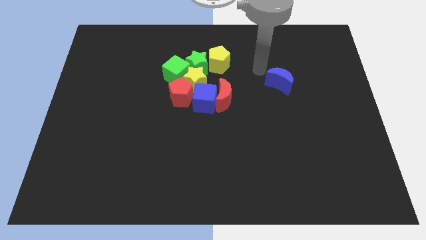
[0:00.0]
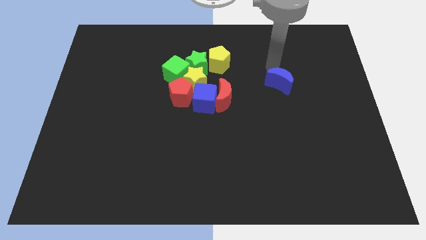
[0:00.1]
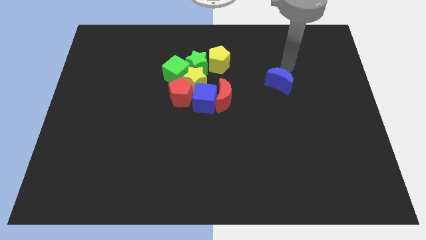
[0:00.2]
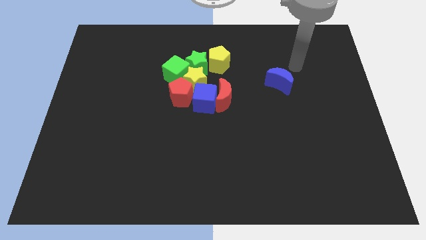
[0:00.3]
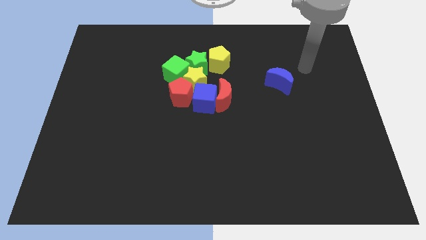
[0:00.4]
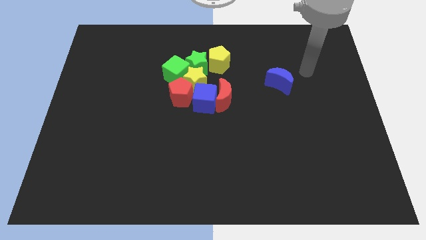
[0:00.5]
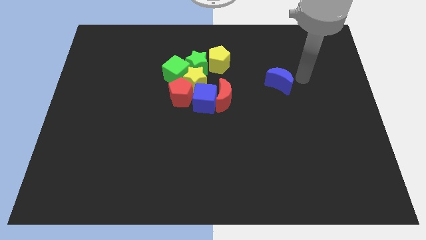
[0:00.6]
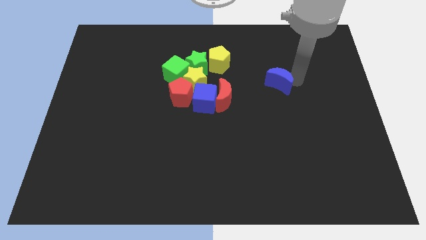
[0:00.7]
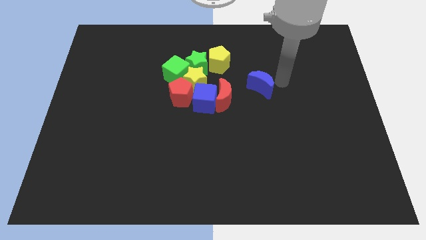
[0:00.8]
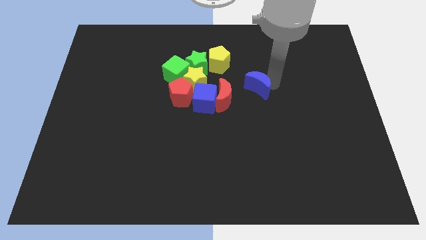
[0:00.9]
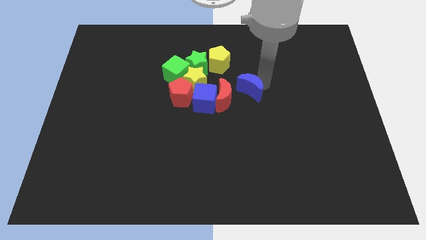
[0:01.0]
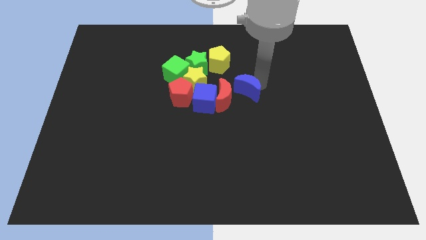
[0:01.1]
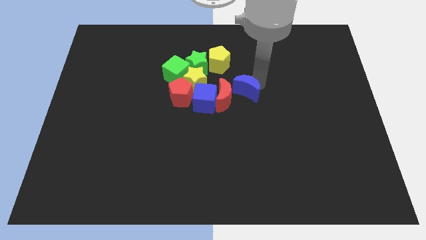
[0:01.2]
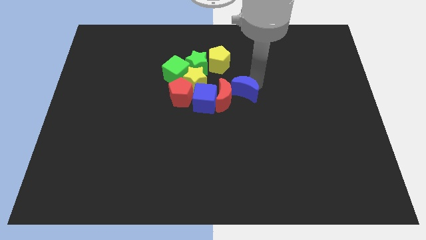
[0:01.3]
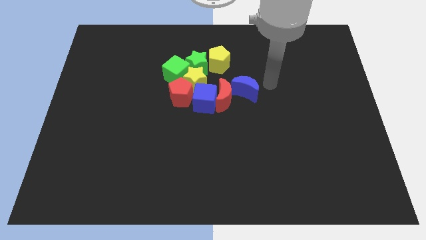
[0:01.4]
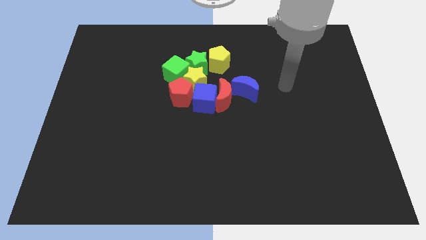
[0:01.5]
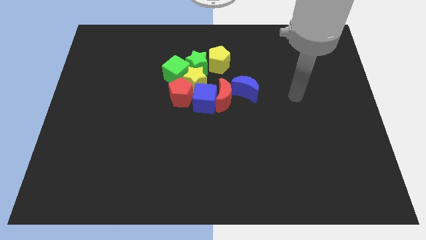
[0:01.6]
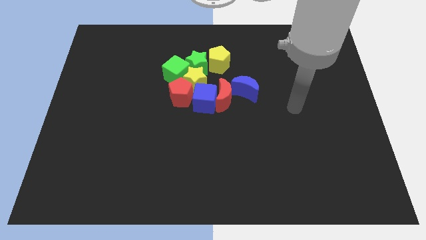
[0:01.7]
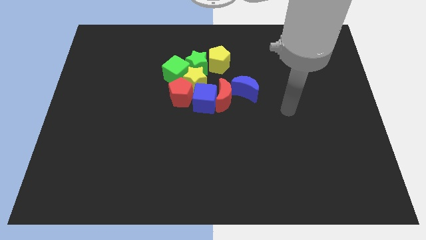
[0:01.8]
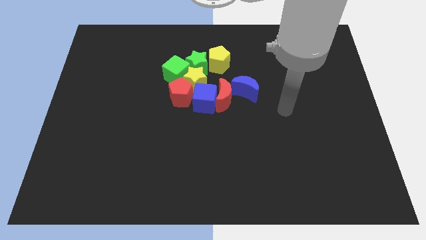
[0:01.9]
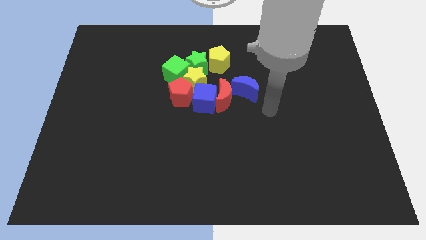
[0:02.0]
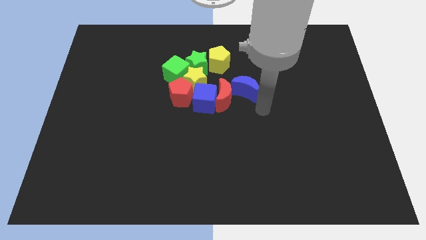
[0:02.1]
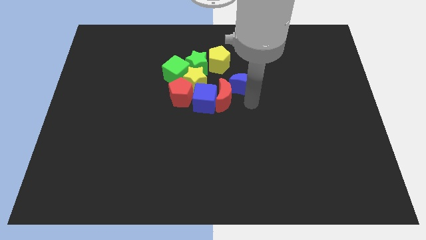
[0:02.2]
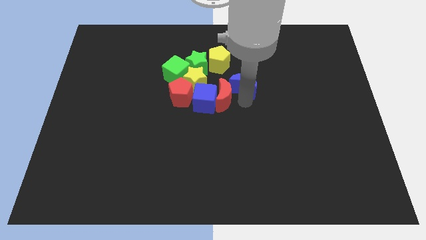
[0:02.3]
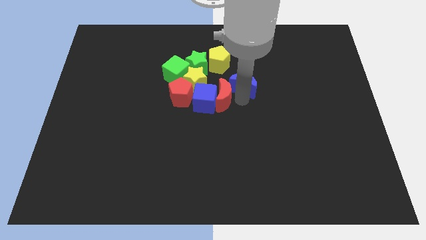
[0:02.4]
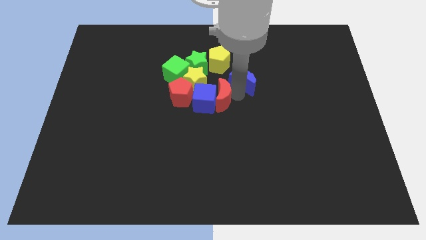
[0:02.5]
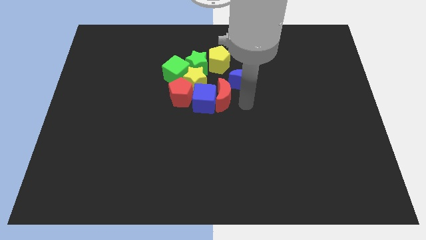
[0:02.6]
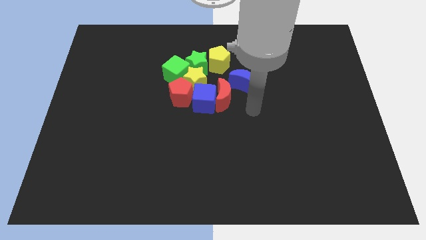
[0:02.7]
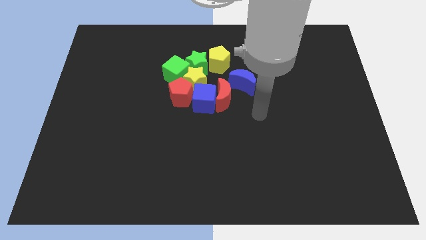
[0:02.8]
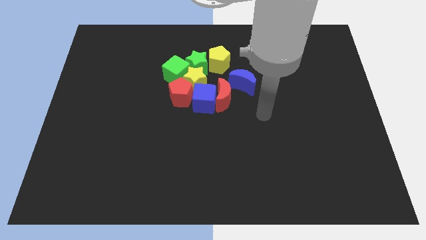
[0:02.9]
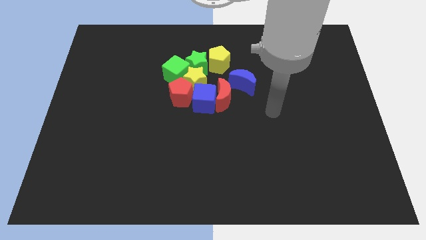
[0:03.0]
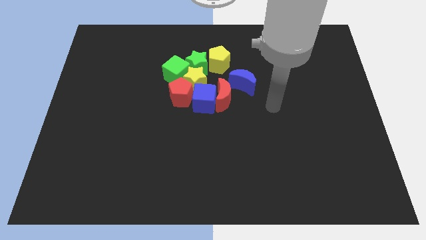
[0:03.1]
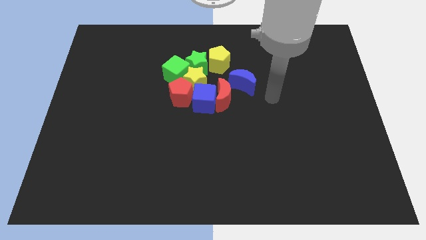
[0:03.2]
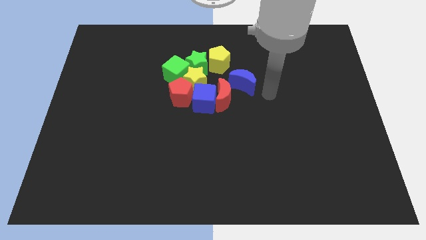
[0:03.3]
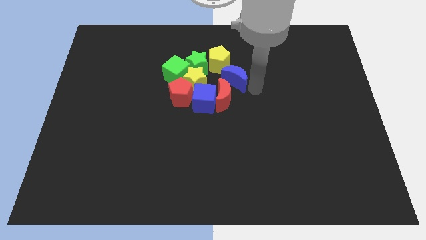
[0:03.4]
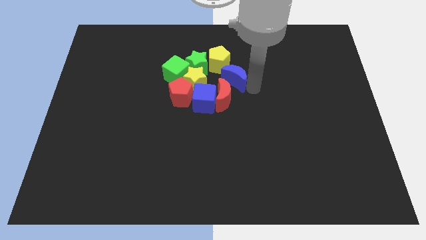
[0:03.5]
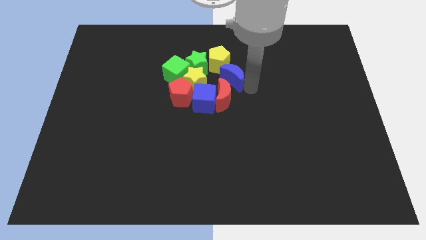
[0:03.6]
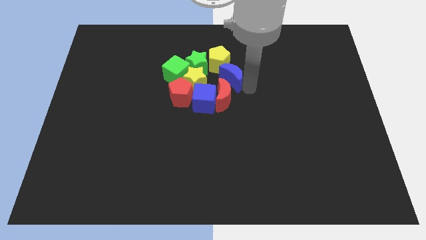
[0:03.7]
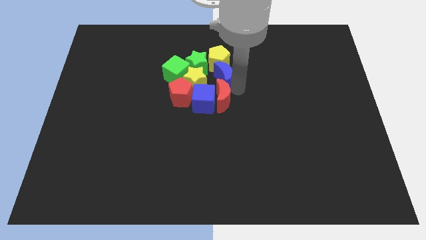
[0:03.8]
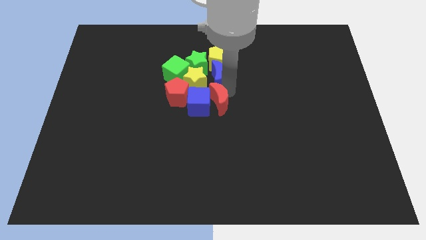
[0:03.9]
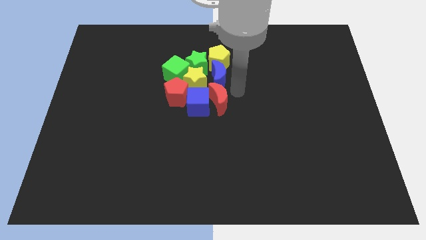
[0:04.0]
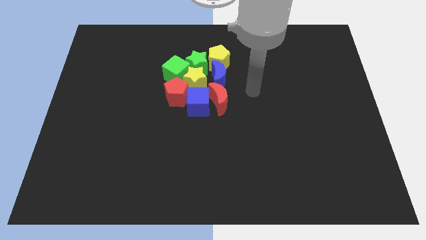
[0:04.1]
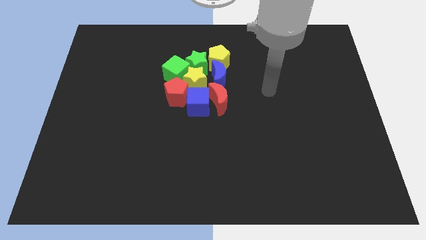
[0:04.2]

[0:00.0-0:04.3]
move the blue crescent to the bottom of the yellow pentagon

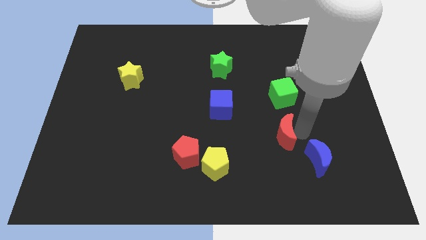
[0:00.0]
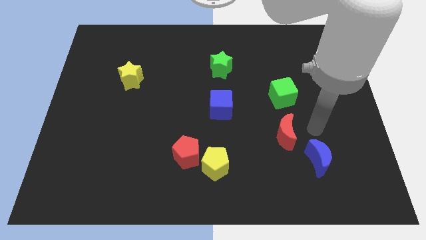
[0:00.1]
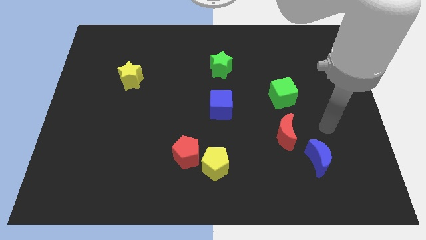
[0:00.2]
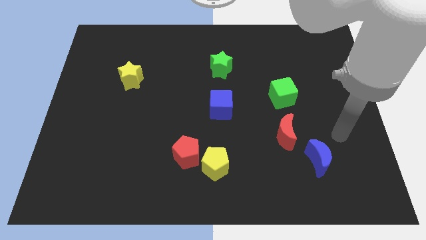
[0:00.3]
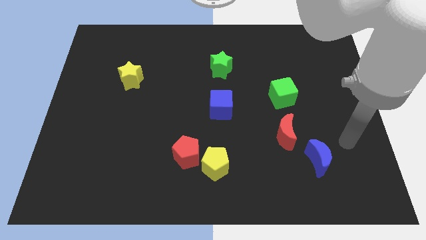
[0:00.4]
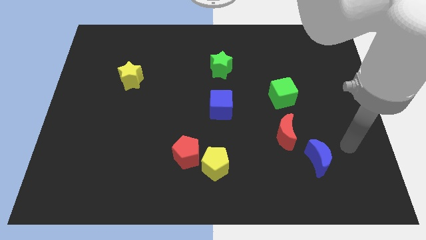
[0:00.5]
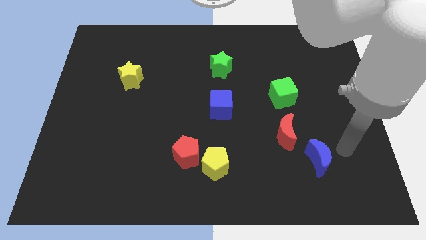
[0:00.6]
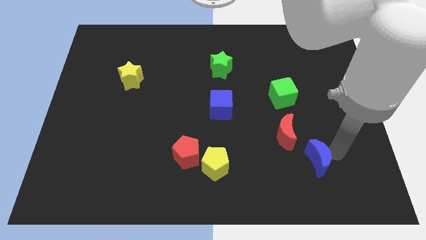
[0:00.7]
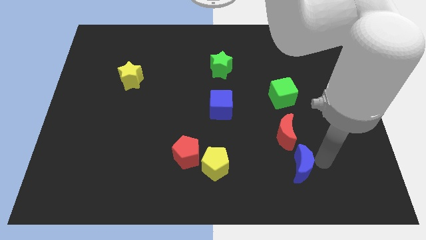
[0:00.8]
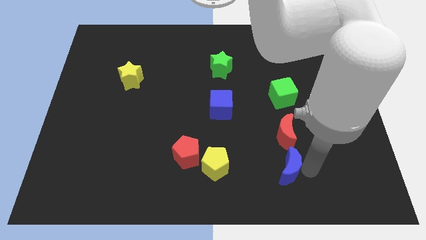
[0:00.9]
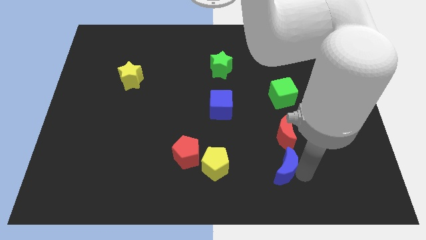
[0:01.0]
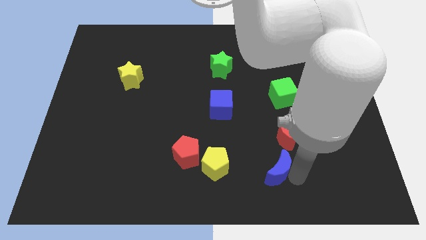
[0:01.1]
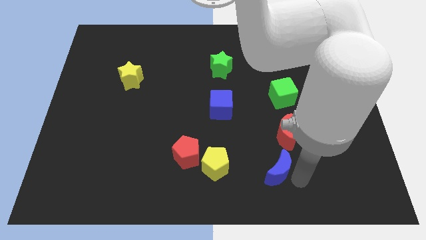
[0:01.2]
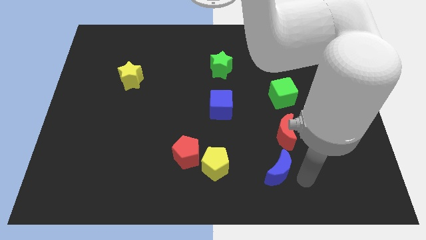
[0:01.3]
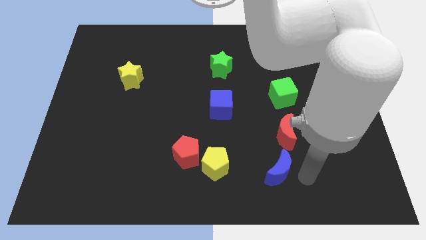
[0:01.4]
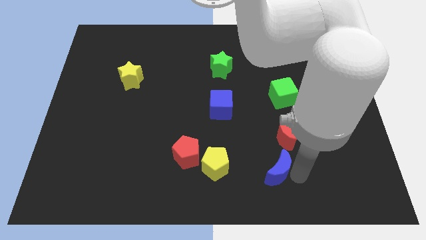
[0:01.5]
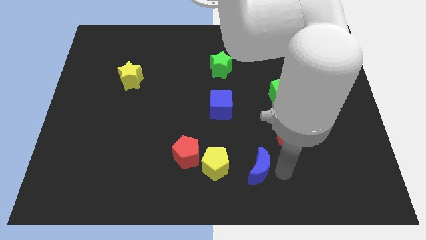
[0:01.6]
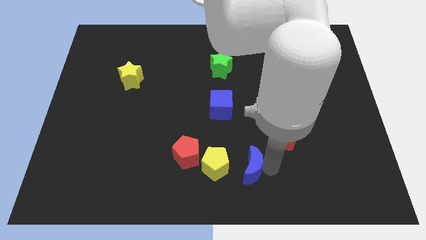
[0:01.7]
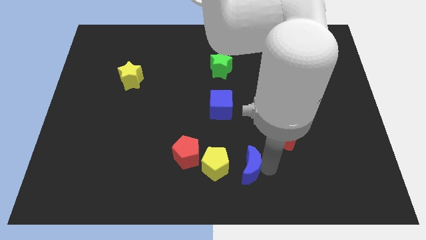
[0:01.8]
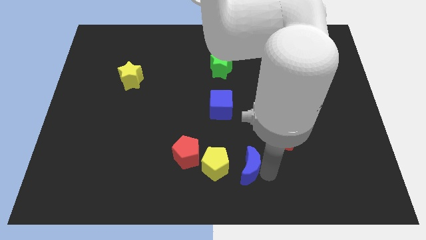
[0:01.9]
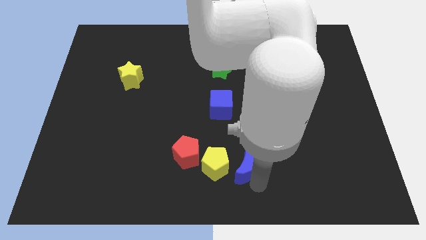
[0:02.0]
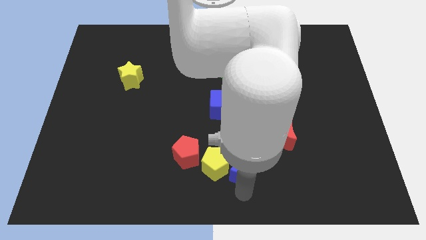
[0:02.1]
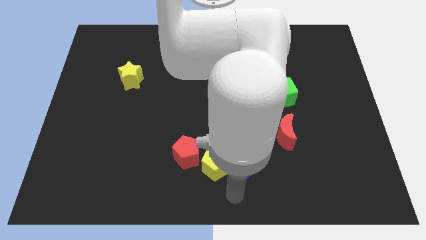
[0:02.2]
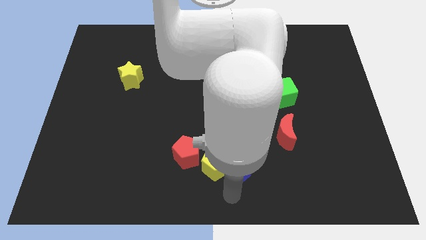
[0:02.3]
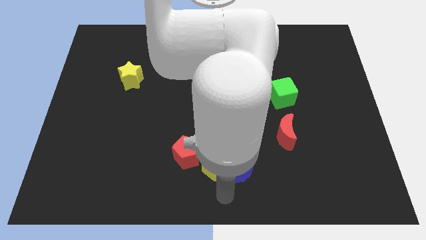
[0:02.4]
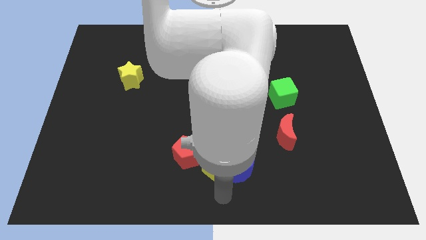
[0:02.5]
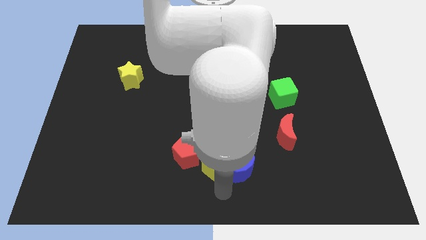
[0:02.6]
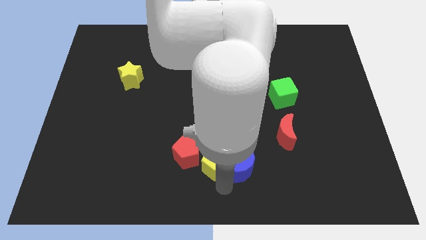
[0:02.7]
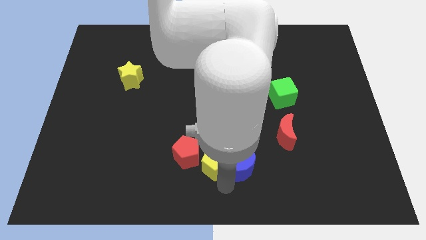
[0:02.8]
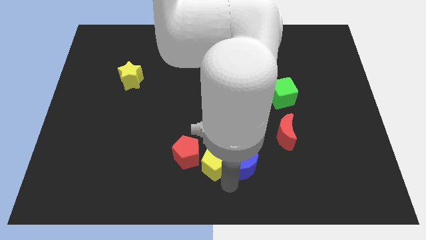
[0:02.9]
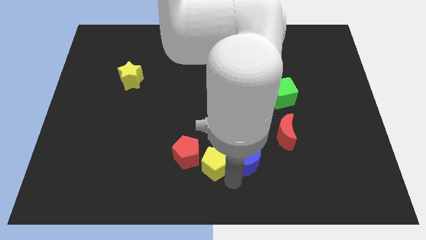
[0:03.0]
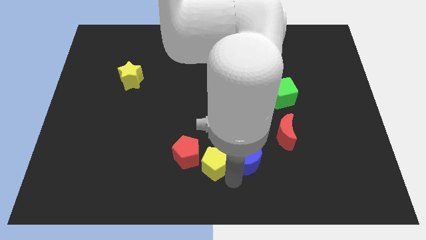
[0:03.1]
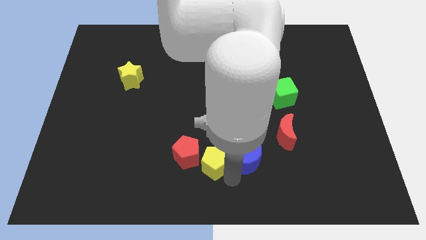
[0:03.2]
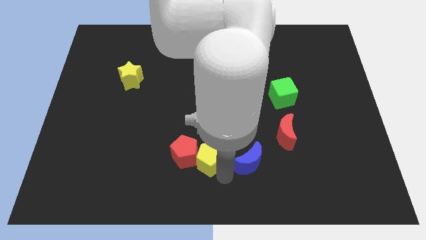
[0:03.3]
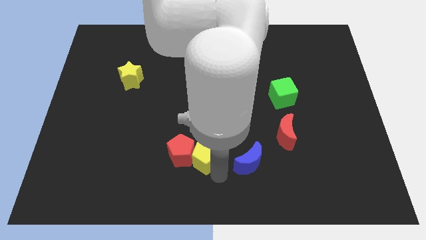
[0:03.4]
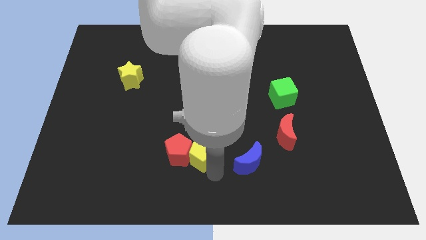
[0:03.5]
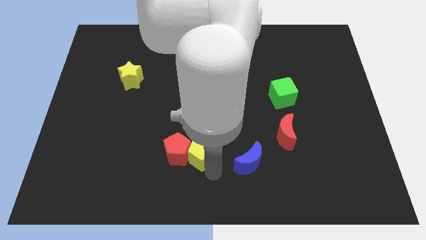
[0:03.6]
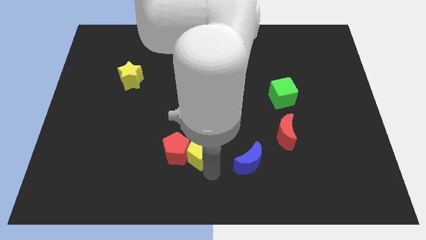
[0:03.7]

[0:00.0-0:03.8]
separate the blue crescent from the pentagons

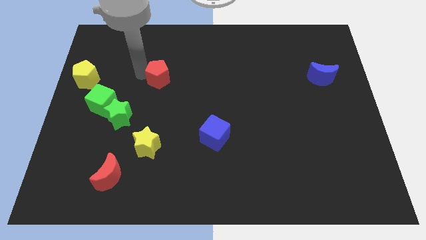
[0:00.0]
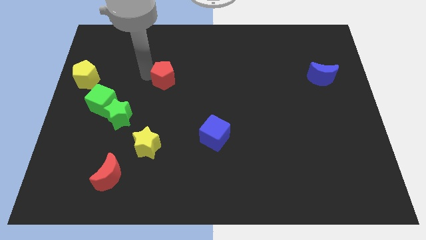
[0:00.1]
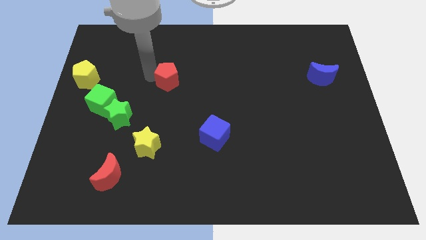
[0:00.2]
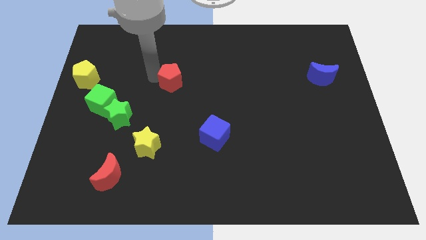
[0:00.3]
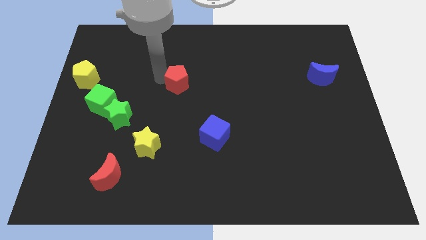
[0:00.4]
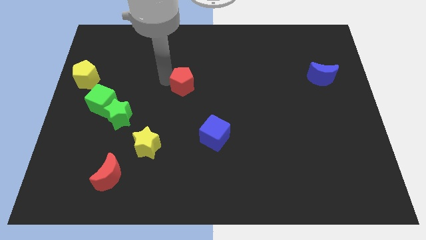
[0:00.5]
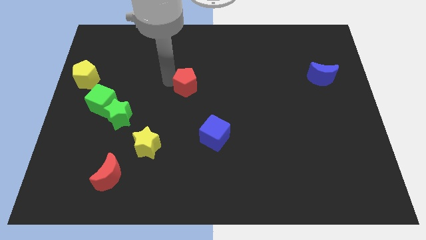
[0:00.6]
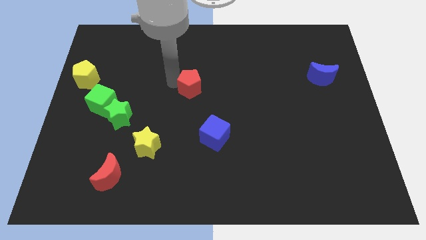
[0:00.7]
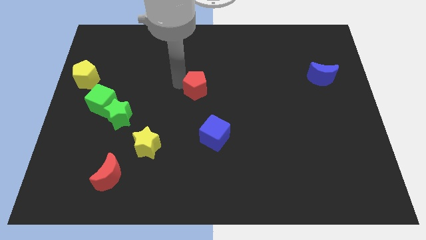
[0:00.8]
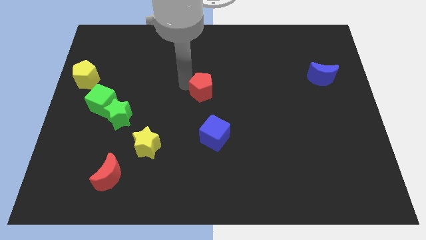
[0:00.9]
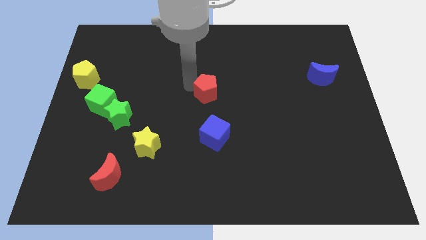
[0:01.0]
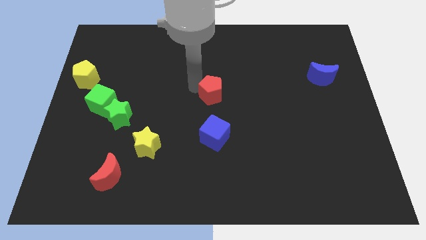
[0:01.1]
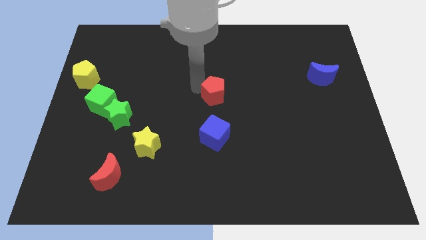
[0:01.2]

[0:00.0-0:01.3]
move the red pentagon to the top of the blue cube
